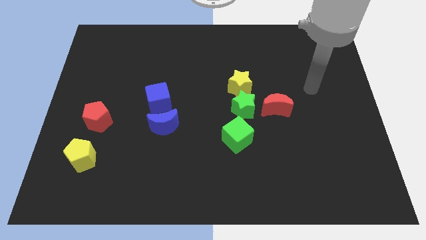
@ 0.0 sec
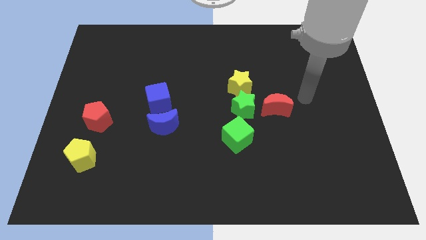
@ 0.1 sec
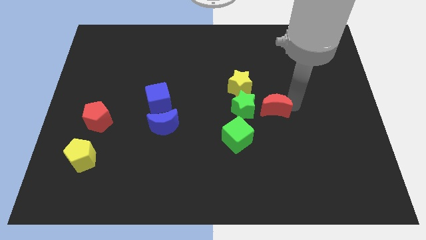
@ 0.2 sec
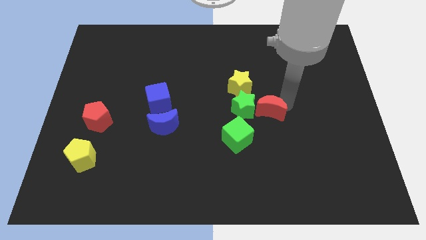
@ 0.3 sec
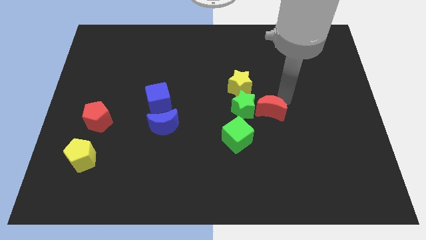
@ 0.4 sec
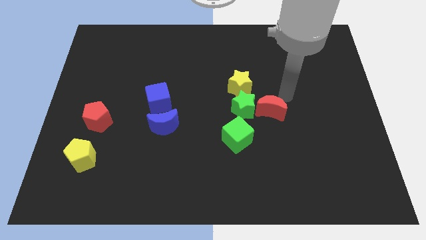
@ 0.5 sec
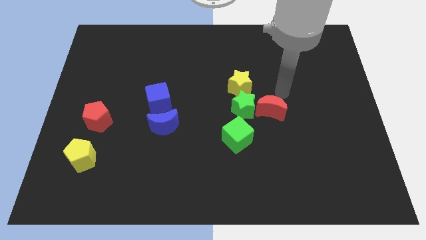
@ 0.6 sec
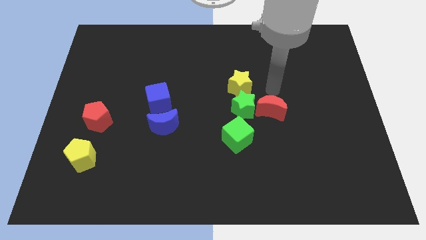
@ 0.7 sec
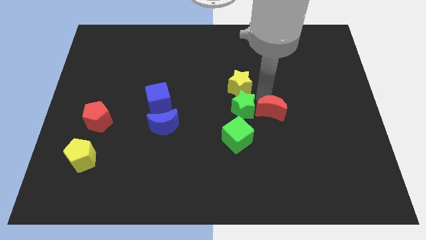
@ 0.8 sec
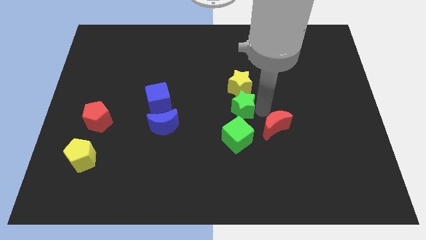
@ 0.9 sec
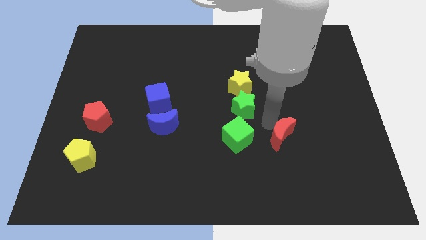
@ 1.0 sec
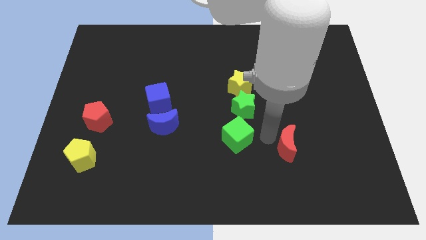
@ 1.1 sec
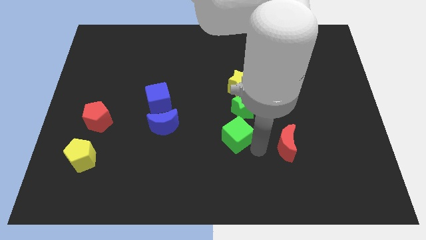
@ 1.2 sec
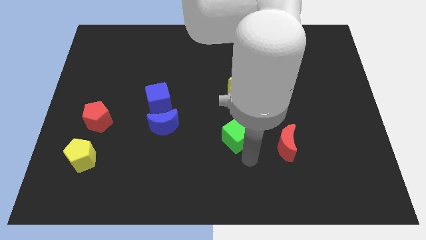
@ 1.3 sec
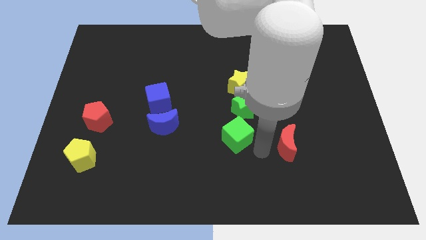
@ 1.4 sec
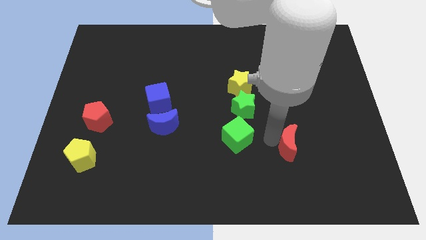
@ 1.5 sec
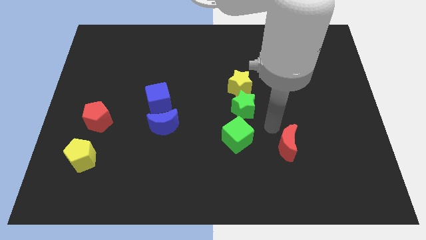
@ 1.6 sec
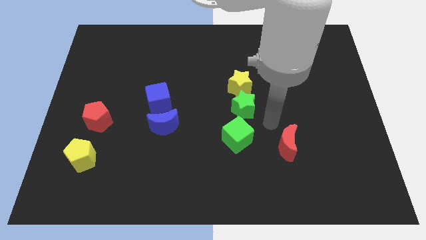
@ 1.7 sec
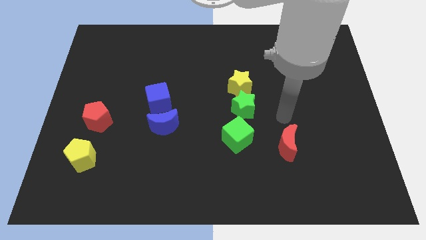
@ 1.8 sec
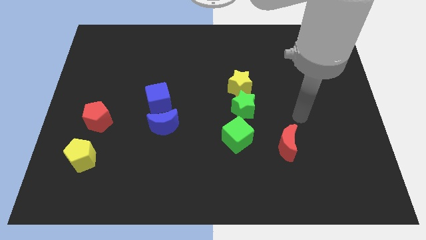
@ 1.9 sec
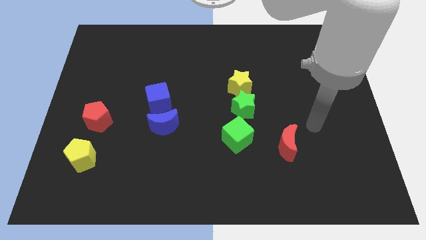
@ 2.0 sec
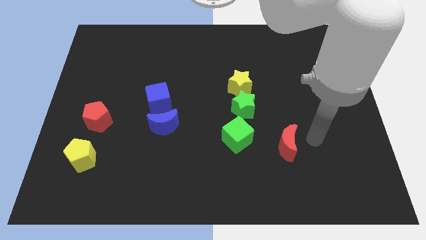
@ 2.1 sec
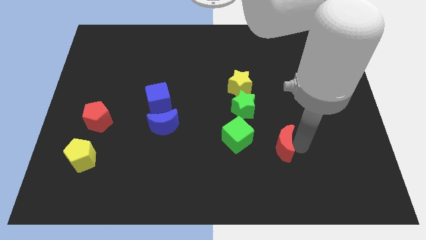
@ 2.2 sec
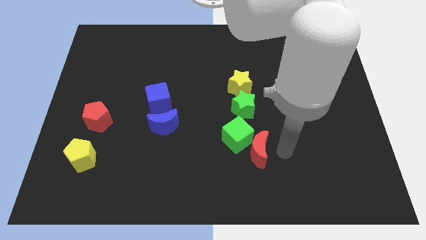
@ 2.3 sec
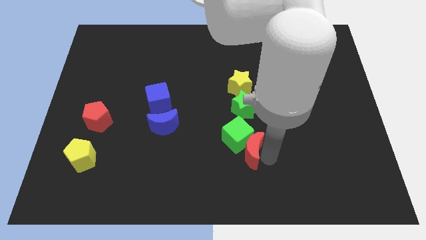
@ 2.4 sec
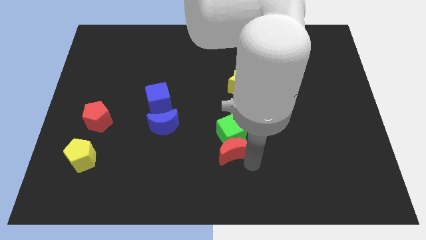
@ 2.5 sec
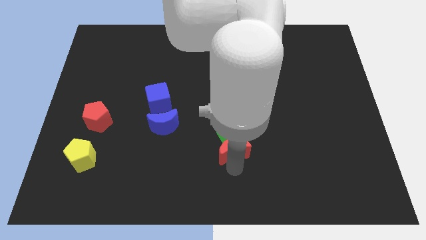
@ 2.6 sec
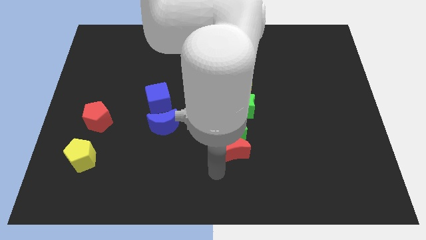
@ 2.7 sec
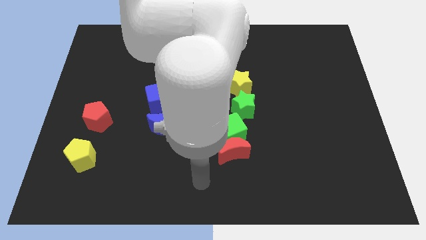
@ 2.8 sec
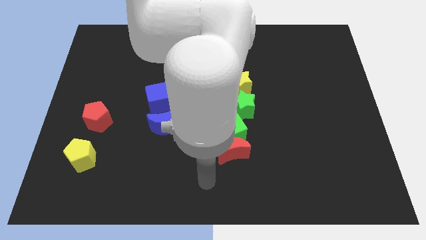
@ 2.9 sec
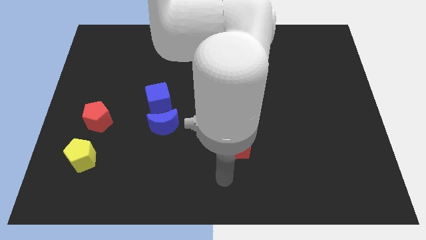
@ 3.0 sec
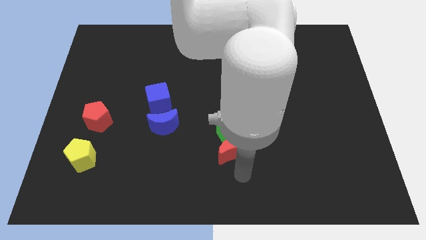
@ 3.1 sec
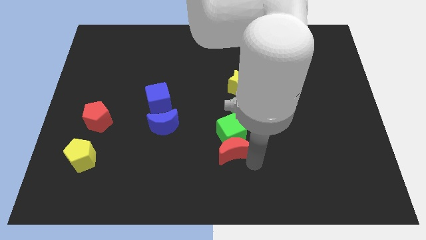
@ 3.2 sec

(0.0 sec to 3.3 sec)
push the red moon to the bottom side of the green cube

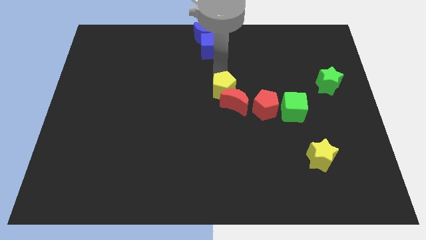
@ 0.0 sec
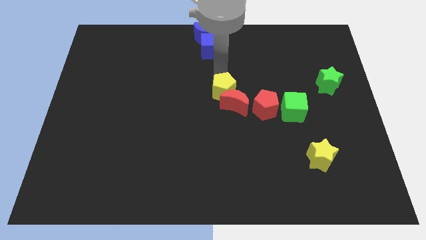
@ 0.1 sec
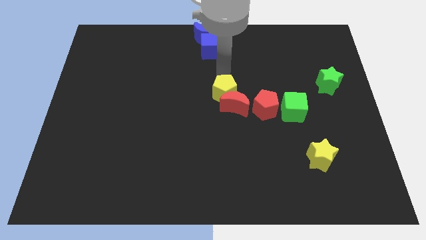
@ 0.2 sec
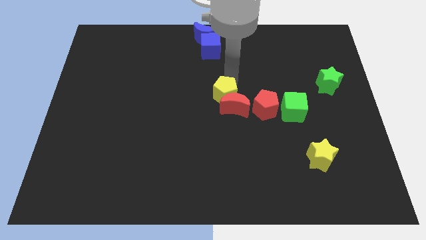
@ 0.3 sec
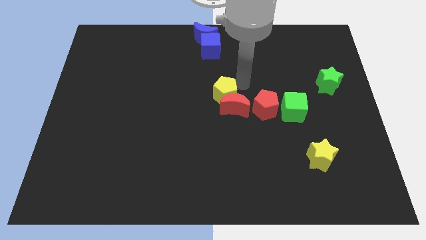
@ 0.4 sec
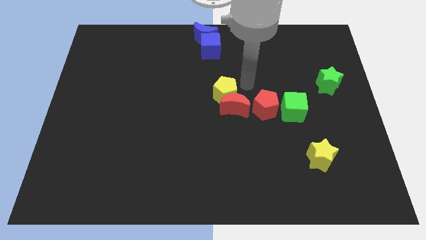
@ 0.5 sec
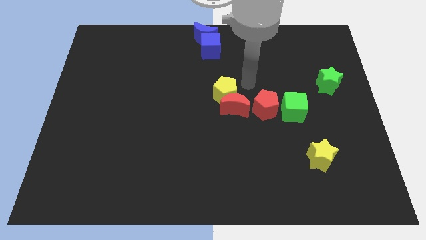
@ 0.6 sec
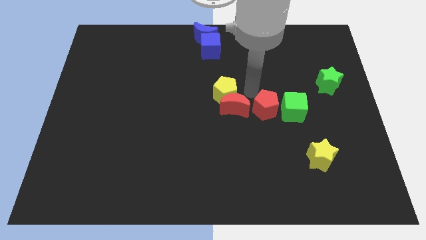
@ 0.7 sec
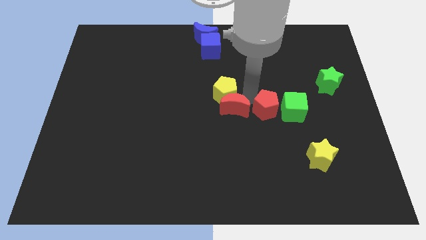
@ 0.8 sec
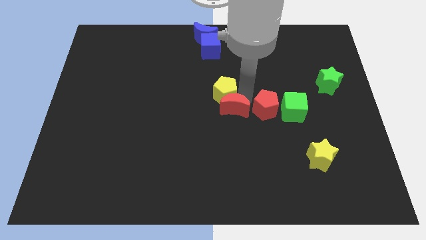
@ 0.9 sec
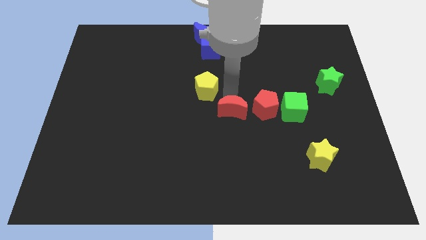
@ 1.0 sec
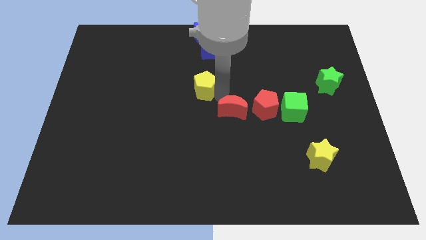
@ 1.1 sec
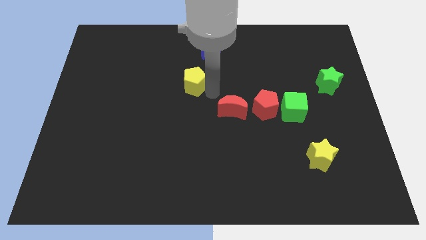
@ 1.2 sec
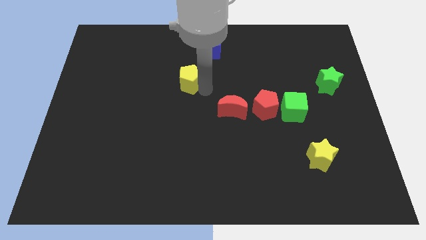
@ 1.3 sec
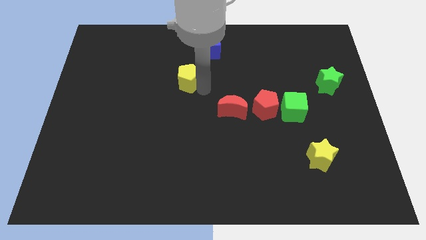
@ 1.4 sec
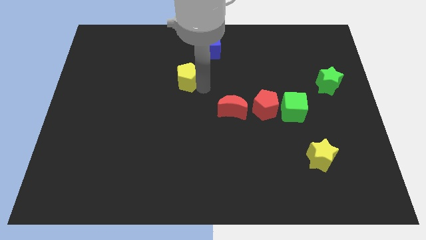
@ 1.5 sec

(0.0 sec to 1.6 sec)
push the yellow pentagon away from the red crescent

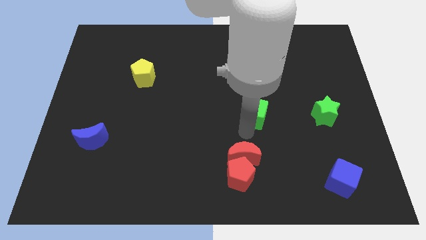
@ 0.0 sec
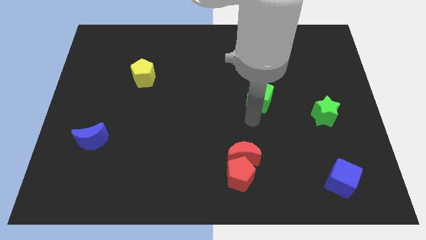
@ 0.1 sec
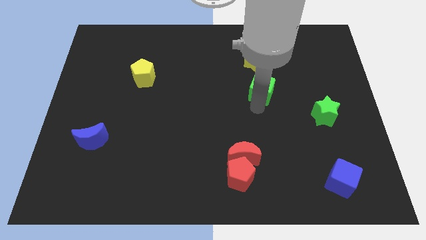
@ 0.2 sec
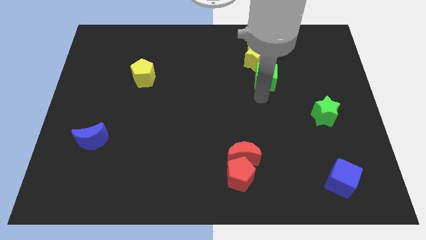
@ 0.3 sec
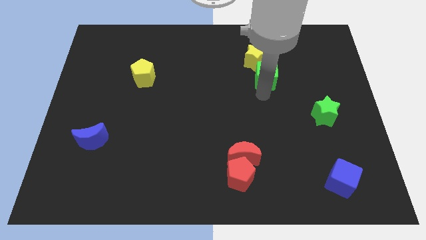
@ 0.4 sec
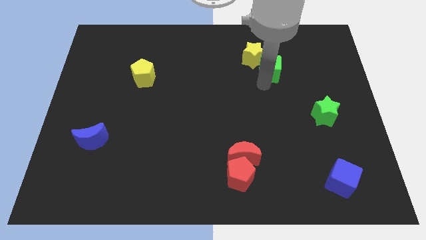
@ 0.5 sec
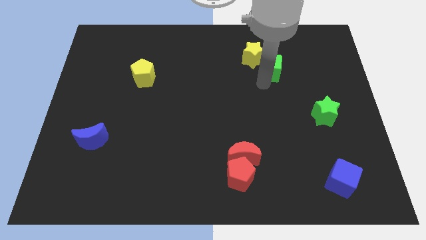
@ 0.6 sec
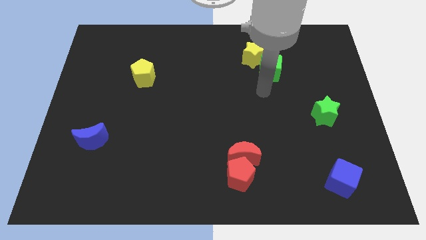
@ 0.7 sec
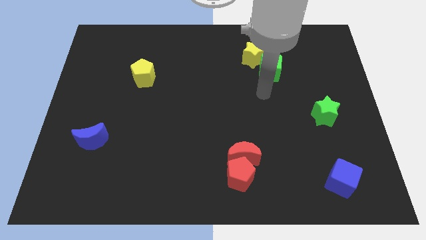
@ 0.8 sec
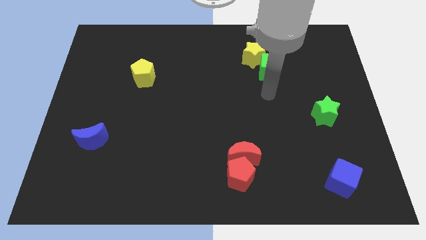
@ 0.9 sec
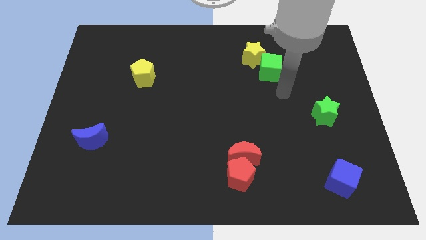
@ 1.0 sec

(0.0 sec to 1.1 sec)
push the green cube into the yellow star

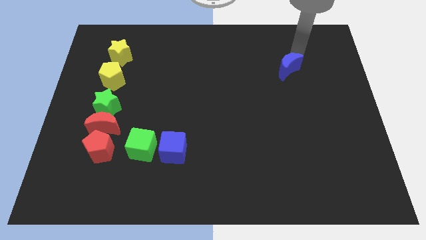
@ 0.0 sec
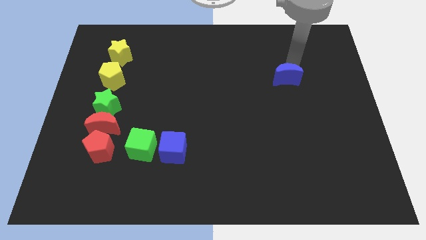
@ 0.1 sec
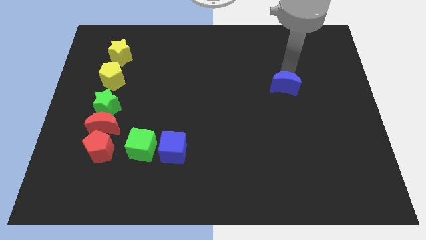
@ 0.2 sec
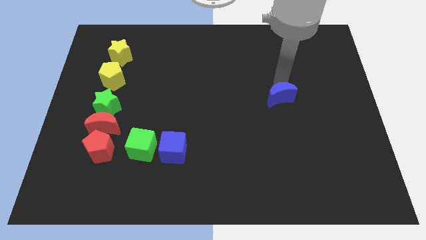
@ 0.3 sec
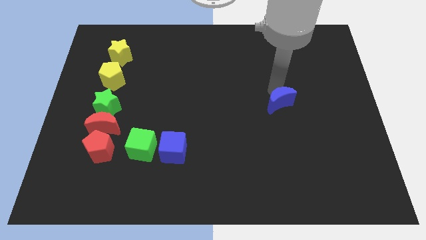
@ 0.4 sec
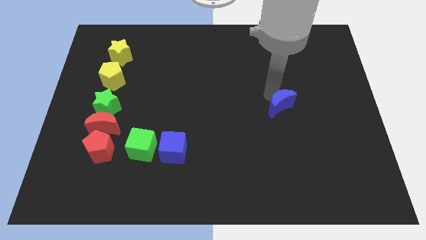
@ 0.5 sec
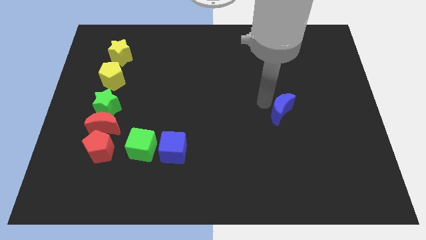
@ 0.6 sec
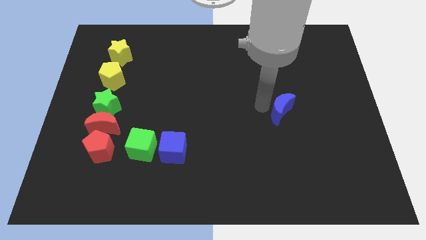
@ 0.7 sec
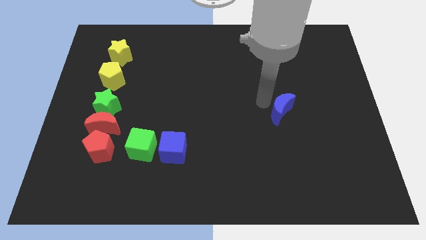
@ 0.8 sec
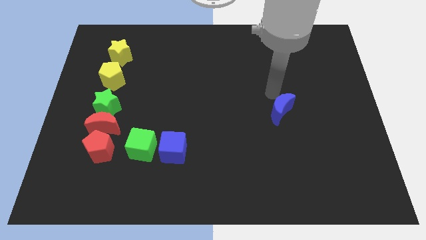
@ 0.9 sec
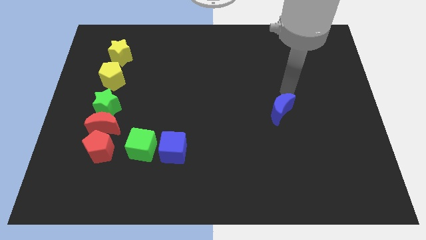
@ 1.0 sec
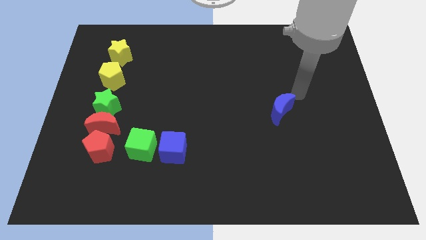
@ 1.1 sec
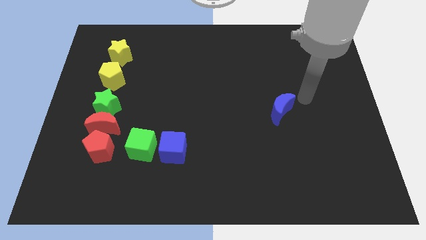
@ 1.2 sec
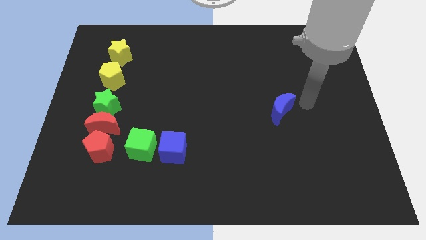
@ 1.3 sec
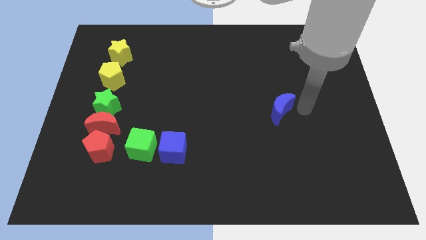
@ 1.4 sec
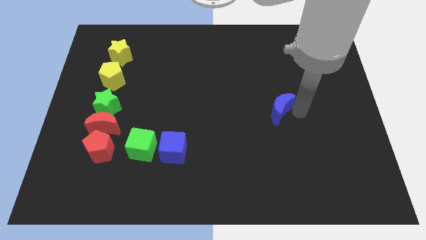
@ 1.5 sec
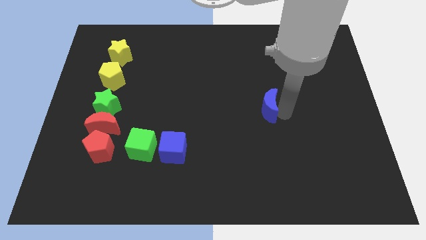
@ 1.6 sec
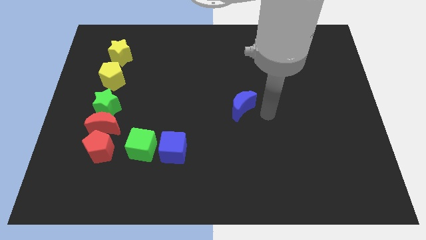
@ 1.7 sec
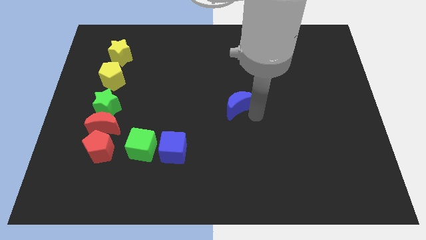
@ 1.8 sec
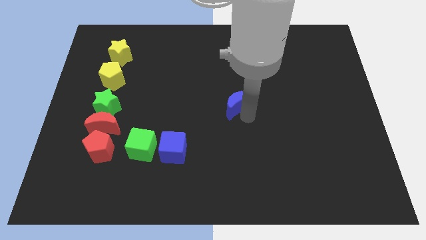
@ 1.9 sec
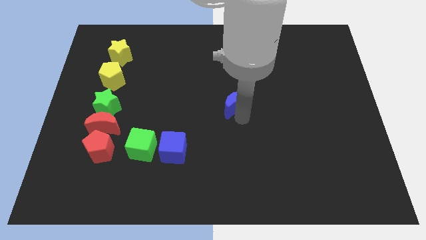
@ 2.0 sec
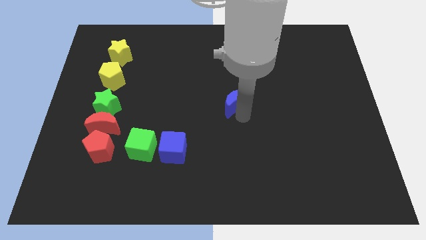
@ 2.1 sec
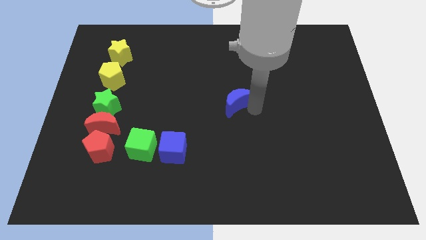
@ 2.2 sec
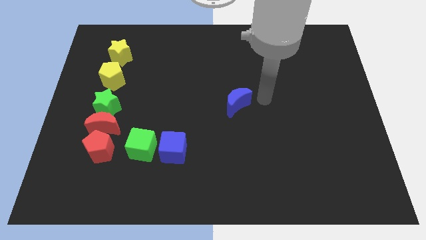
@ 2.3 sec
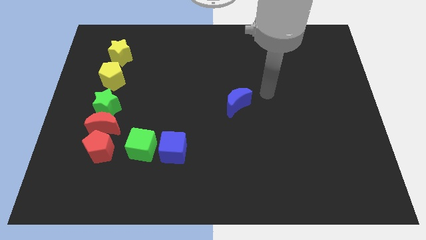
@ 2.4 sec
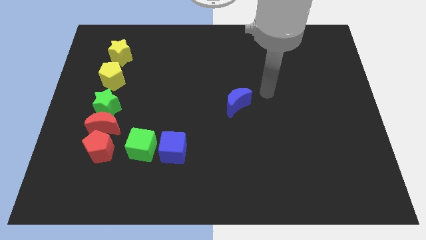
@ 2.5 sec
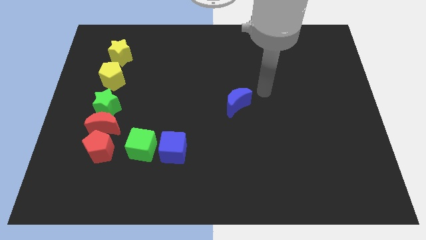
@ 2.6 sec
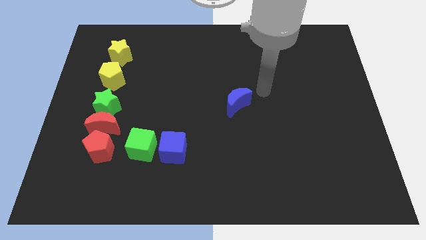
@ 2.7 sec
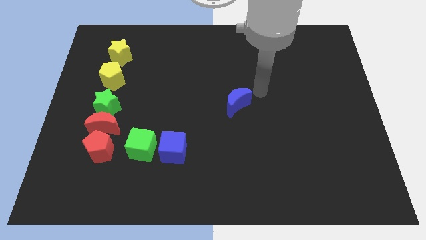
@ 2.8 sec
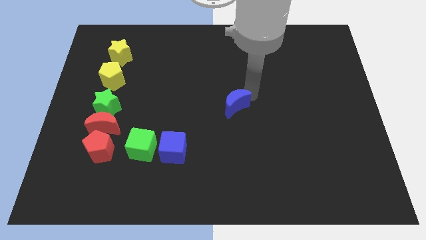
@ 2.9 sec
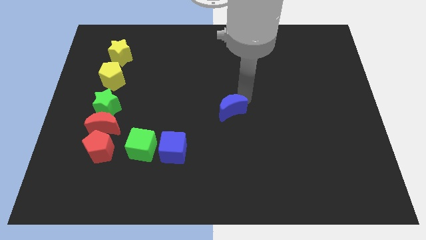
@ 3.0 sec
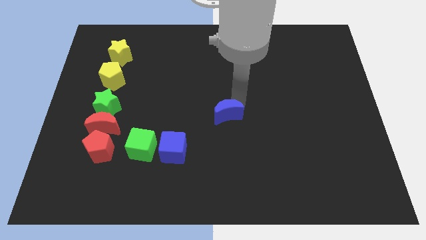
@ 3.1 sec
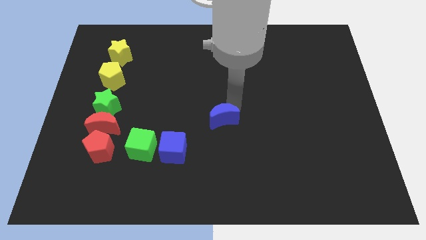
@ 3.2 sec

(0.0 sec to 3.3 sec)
place the blue moon at the center of the board
